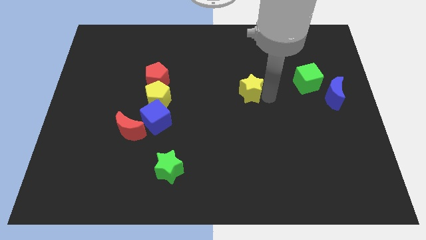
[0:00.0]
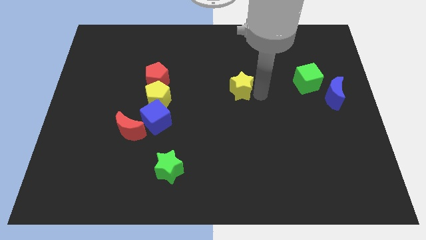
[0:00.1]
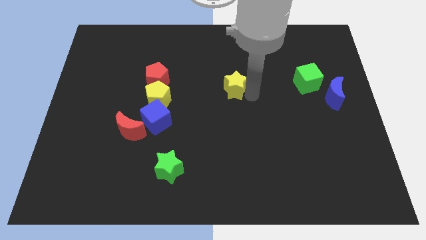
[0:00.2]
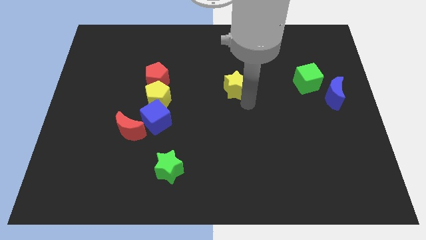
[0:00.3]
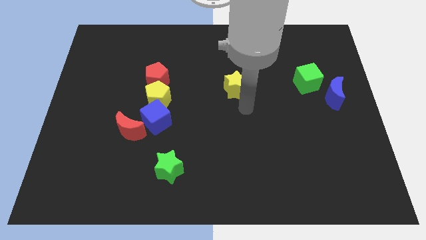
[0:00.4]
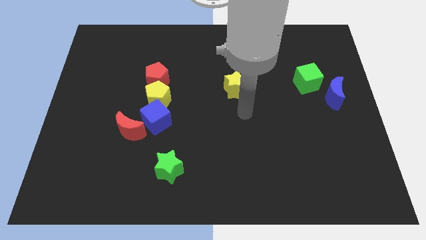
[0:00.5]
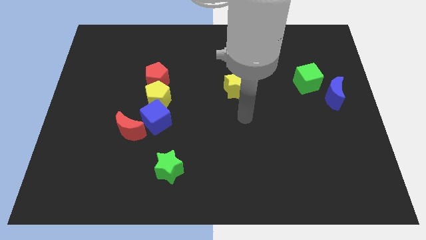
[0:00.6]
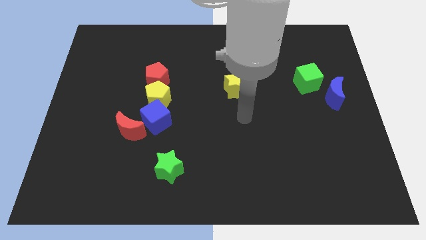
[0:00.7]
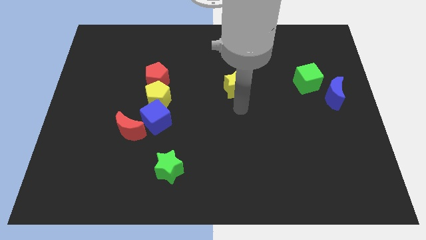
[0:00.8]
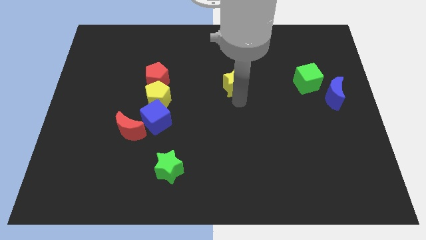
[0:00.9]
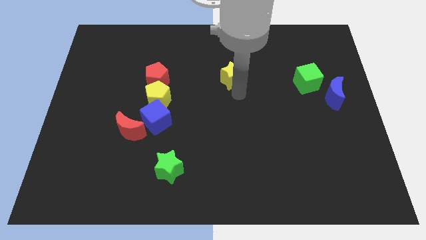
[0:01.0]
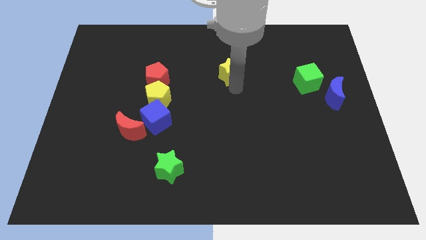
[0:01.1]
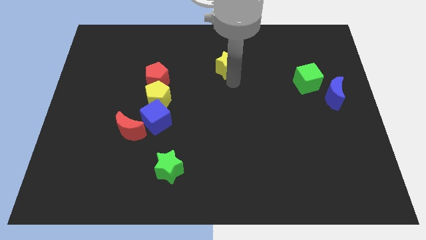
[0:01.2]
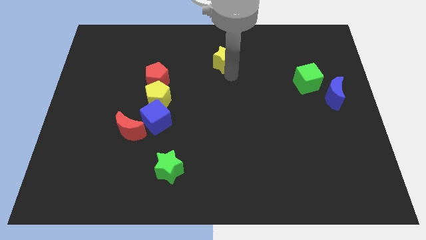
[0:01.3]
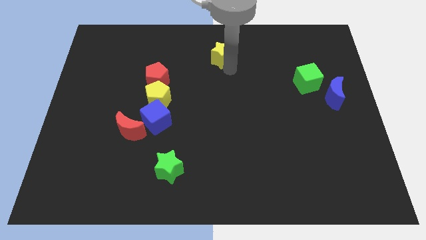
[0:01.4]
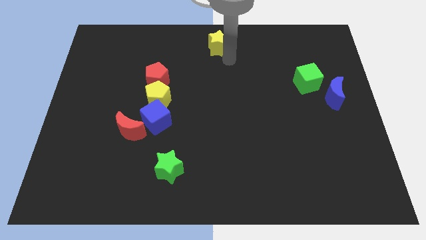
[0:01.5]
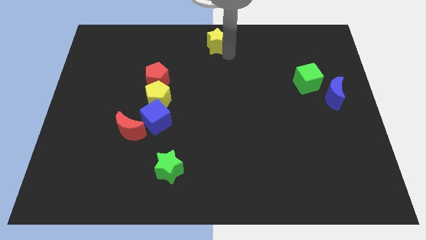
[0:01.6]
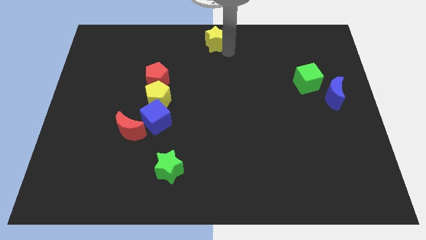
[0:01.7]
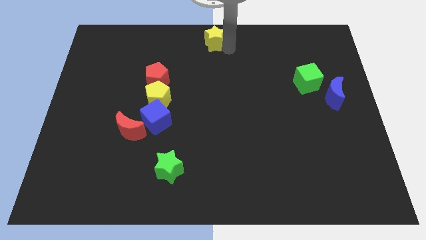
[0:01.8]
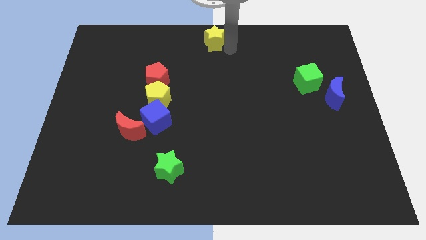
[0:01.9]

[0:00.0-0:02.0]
place the yellow star at the top center of the board

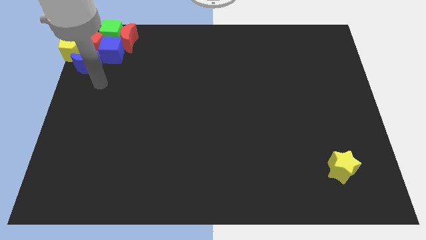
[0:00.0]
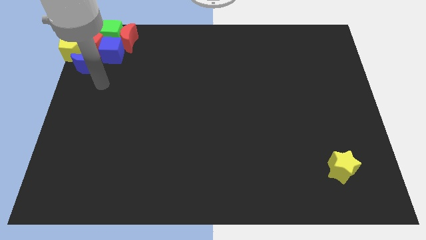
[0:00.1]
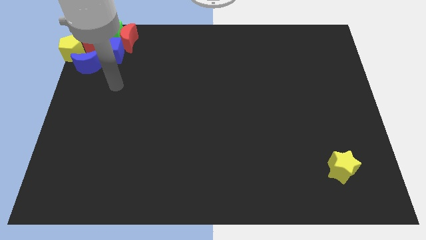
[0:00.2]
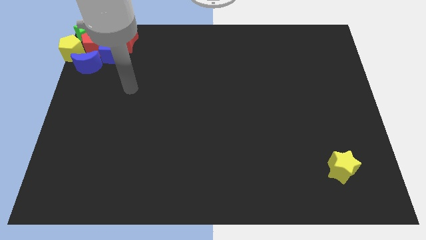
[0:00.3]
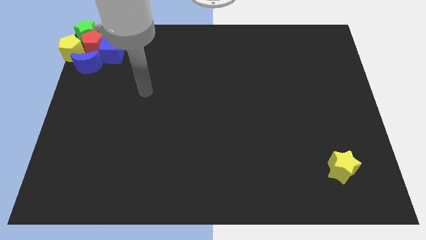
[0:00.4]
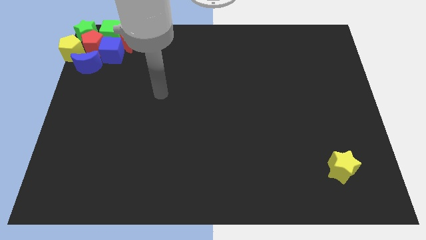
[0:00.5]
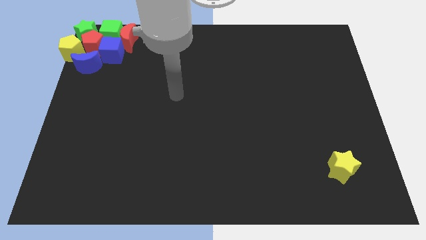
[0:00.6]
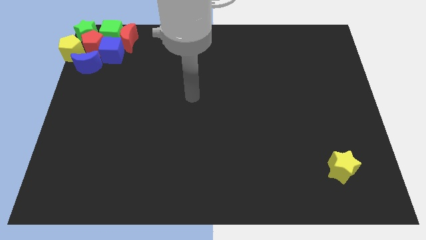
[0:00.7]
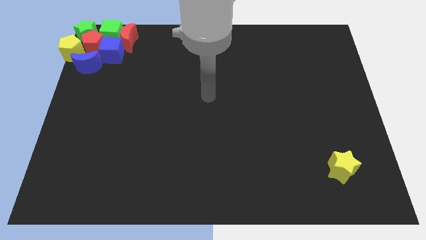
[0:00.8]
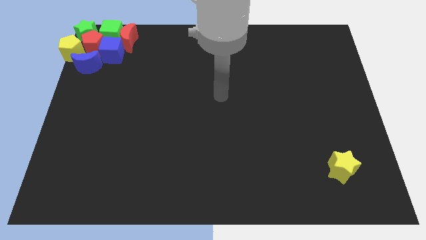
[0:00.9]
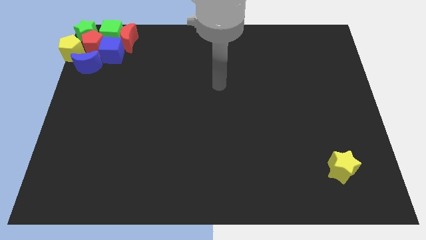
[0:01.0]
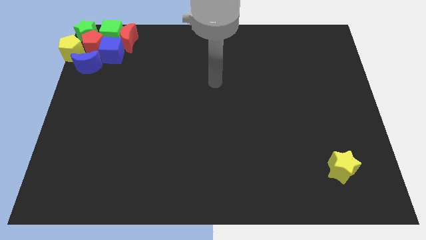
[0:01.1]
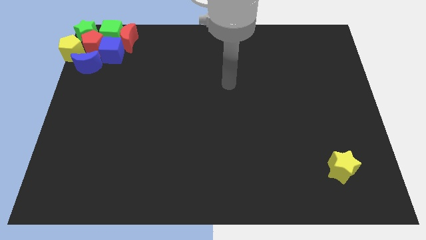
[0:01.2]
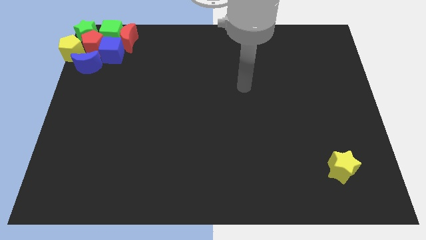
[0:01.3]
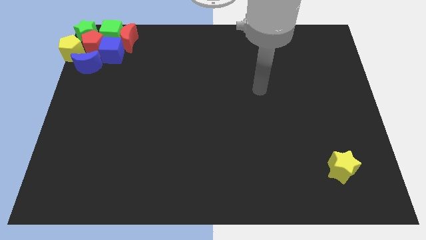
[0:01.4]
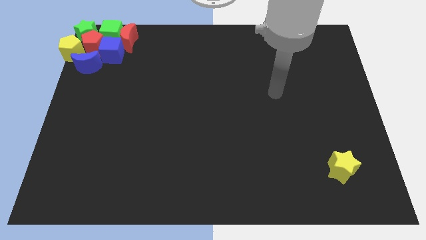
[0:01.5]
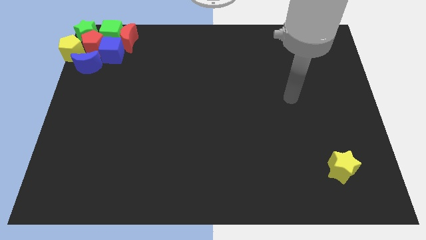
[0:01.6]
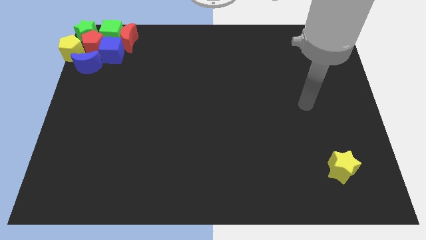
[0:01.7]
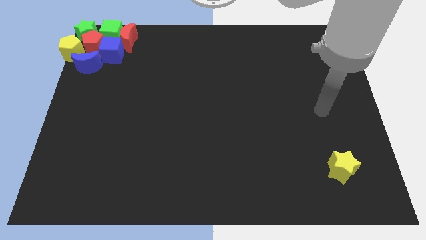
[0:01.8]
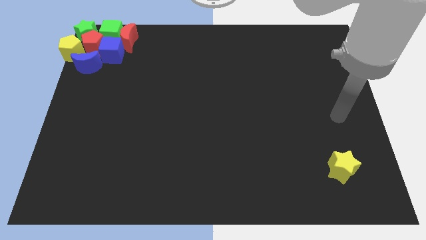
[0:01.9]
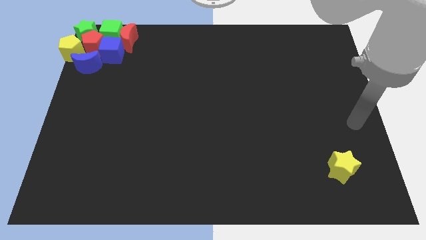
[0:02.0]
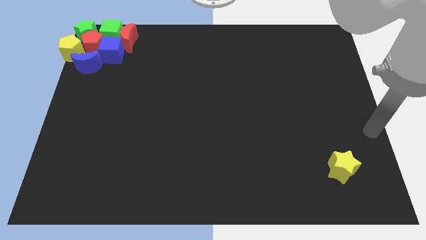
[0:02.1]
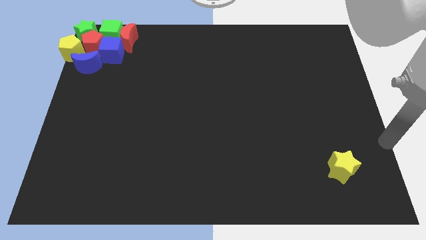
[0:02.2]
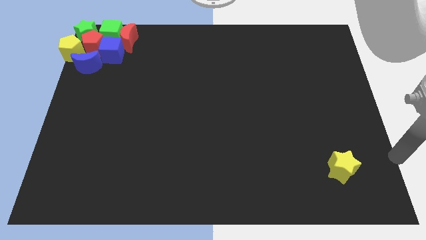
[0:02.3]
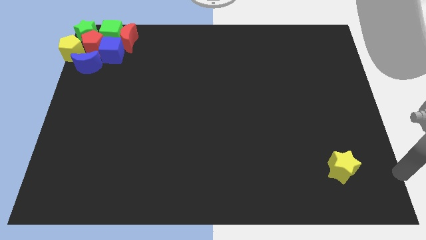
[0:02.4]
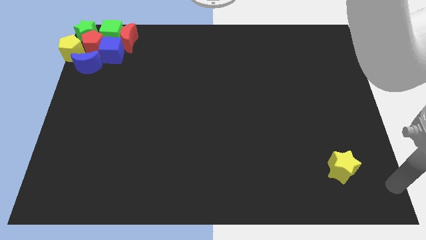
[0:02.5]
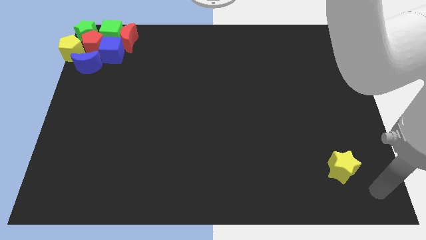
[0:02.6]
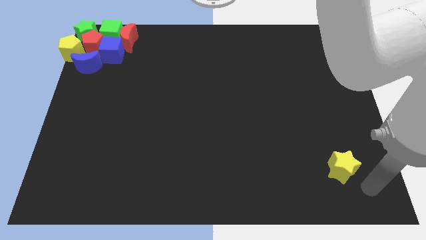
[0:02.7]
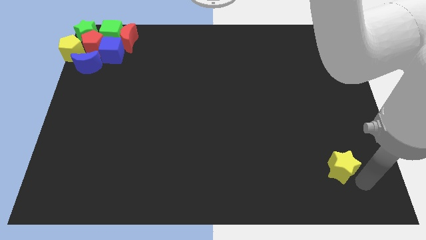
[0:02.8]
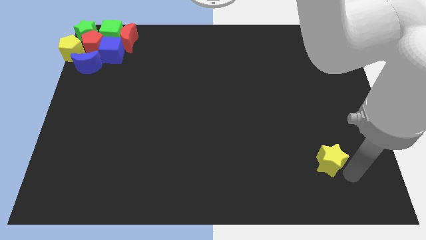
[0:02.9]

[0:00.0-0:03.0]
push your arm to the yellow star

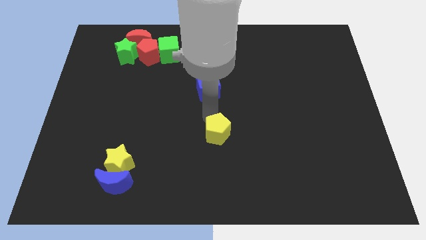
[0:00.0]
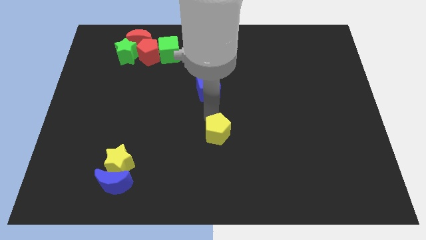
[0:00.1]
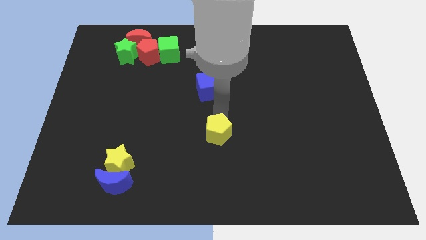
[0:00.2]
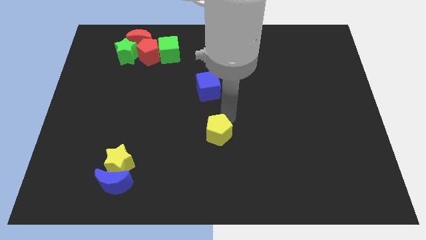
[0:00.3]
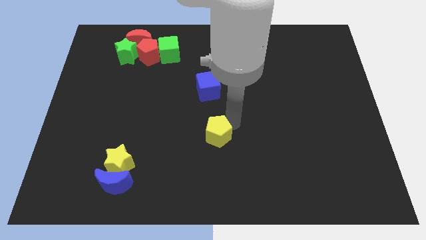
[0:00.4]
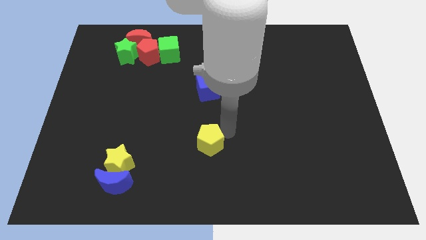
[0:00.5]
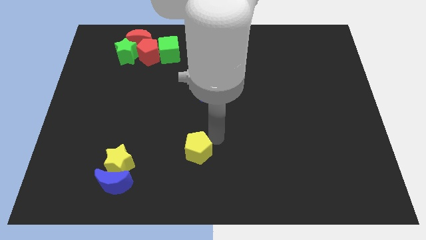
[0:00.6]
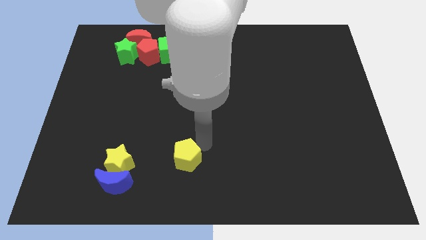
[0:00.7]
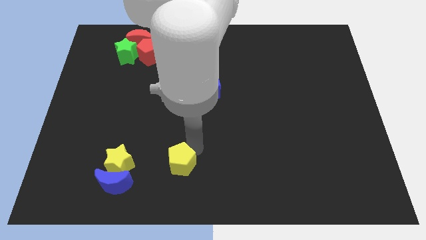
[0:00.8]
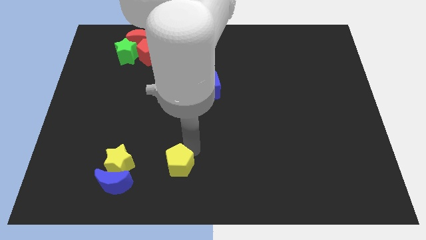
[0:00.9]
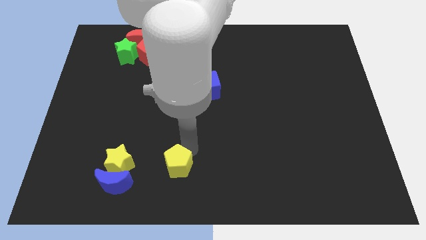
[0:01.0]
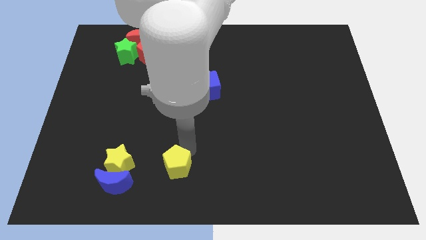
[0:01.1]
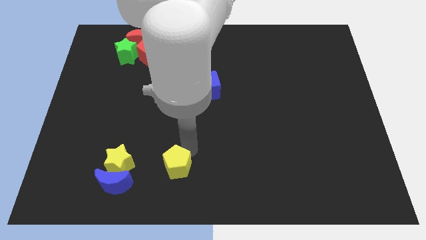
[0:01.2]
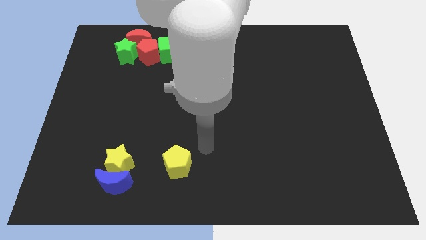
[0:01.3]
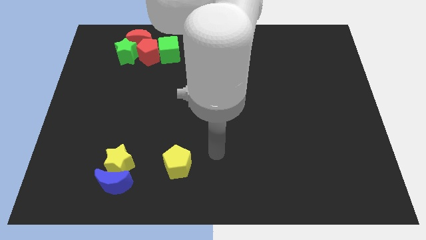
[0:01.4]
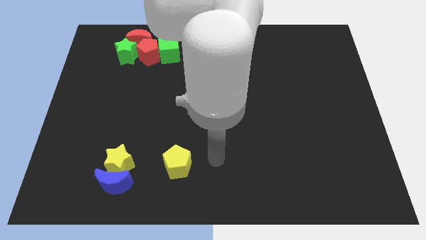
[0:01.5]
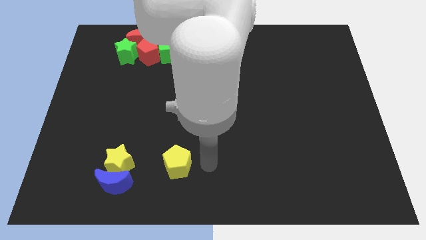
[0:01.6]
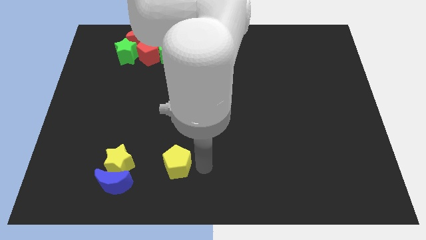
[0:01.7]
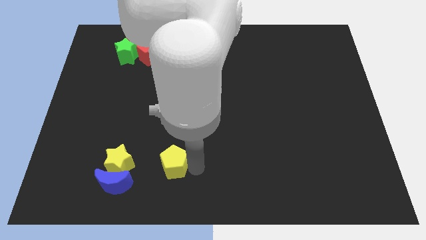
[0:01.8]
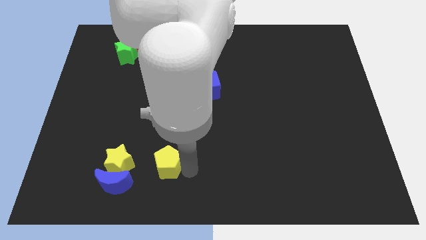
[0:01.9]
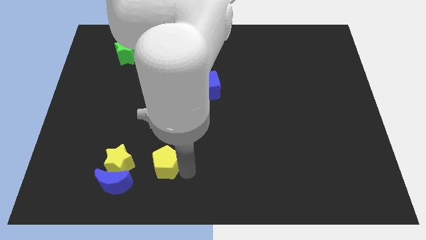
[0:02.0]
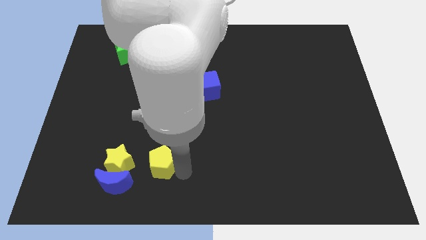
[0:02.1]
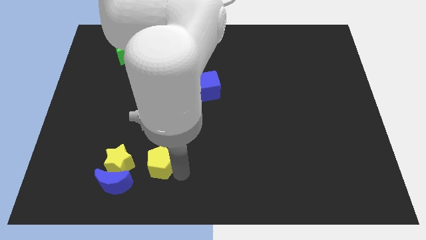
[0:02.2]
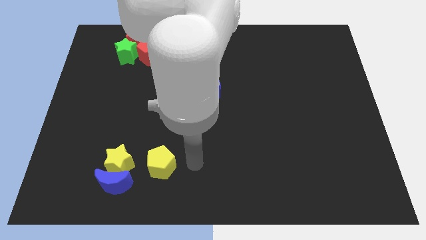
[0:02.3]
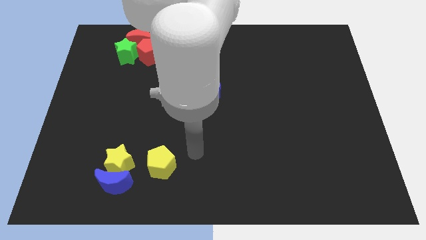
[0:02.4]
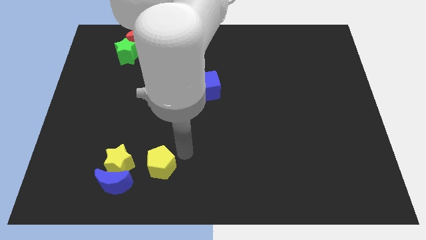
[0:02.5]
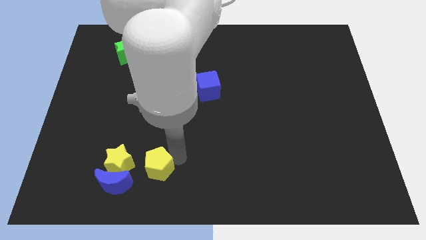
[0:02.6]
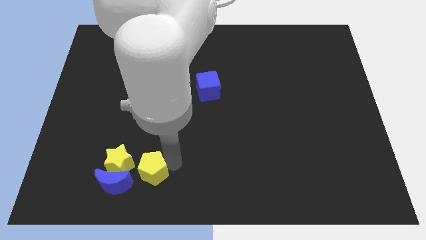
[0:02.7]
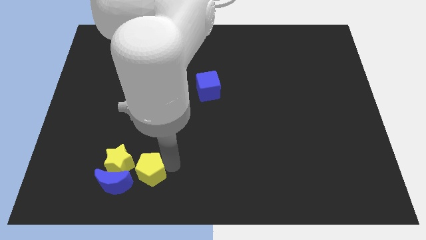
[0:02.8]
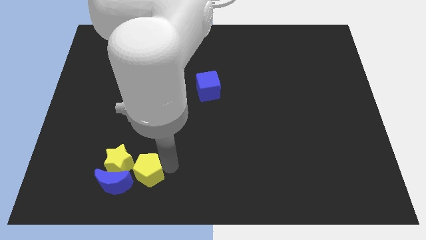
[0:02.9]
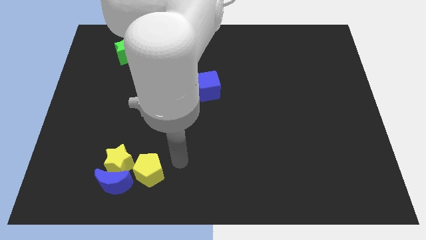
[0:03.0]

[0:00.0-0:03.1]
push the yellow pentagon to the right of the yellow star

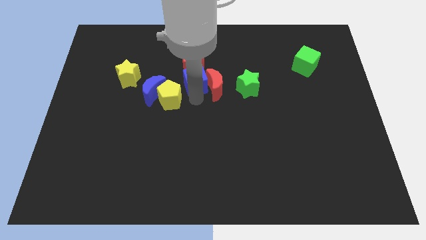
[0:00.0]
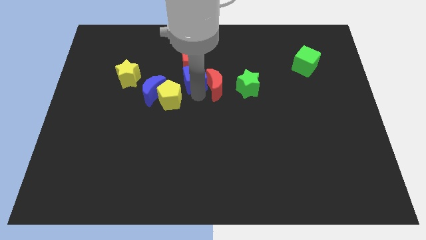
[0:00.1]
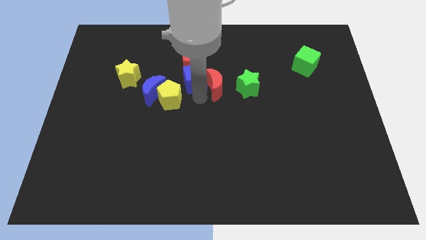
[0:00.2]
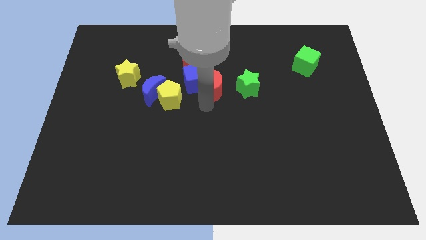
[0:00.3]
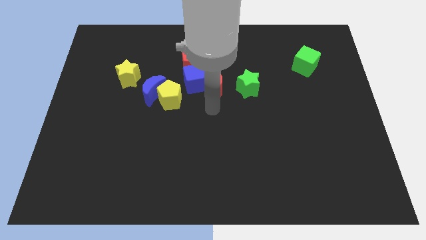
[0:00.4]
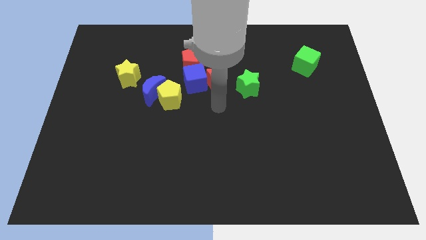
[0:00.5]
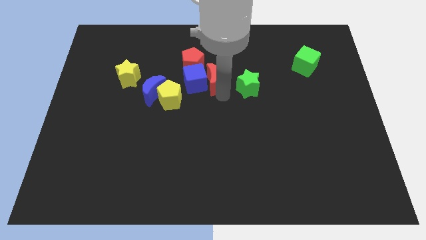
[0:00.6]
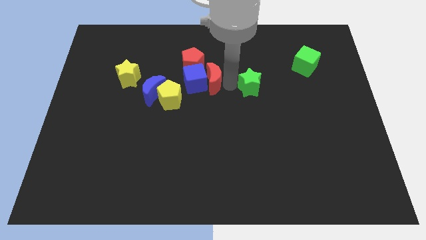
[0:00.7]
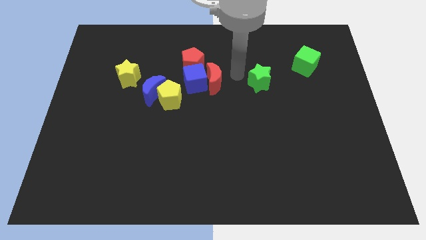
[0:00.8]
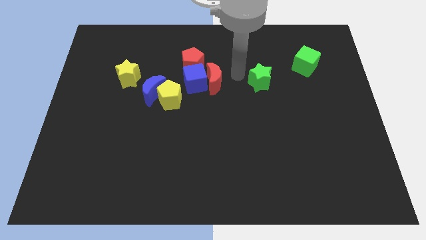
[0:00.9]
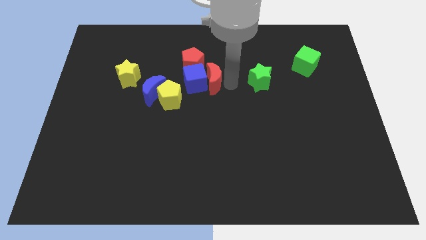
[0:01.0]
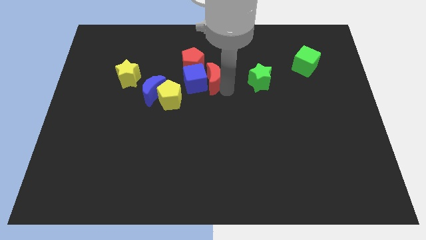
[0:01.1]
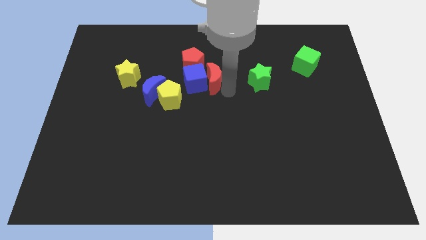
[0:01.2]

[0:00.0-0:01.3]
push green star towards the green cube
